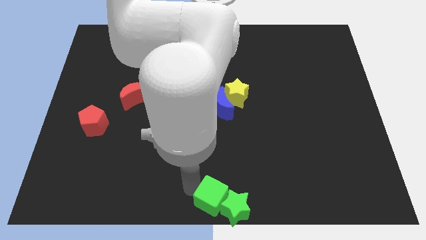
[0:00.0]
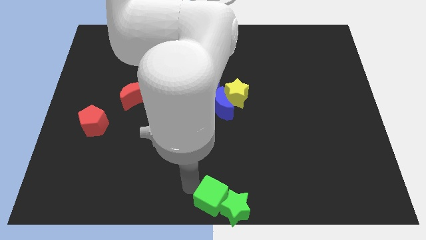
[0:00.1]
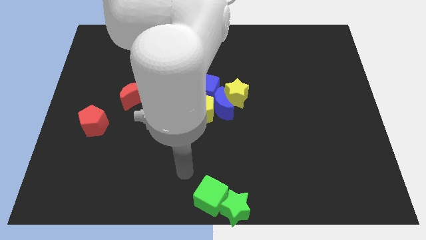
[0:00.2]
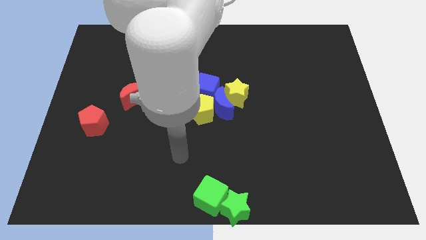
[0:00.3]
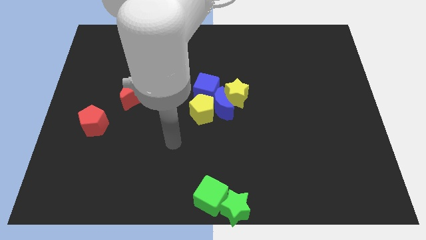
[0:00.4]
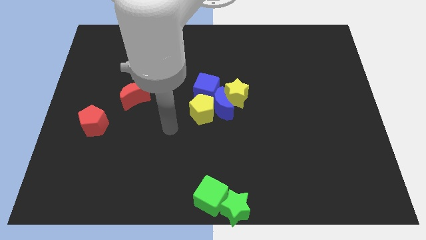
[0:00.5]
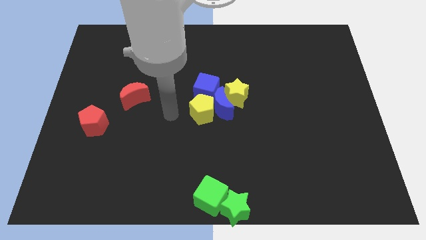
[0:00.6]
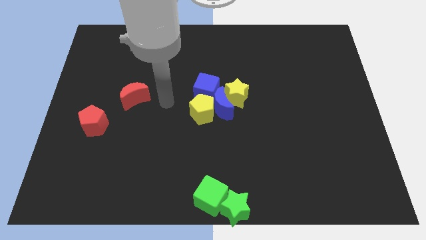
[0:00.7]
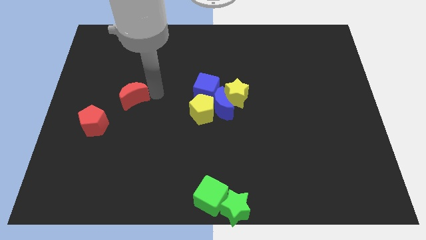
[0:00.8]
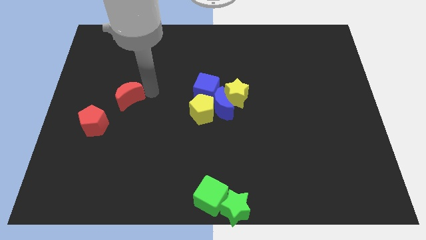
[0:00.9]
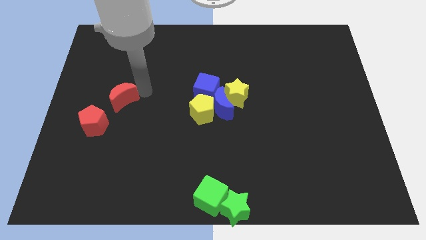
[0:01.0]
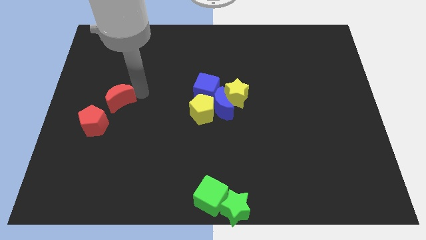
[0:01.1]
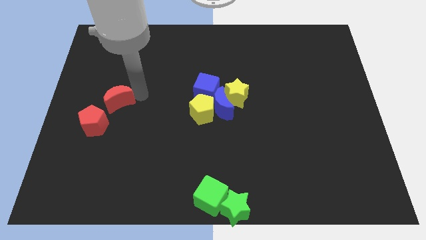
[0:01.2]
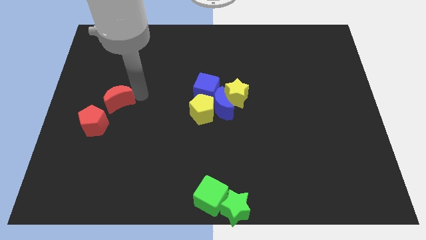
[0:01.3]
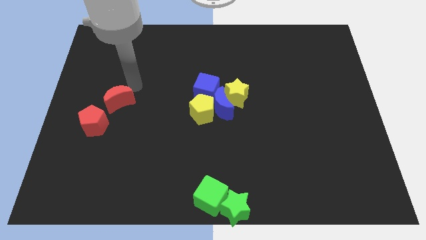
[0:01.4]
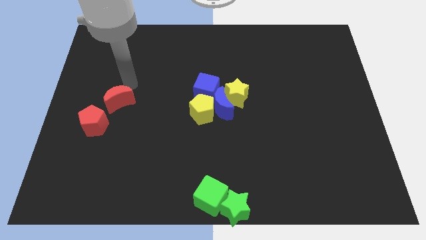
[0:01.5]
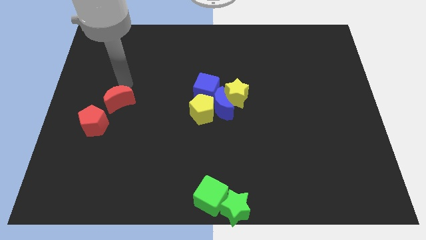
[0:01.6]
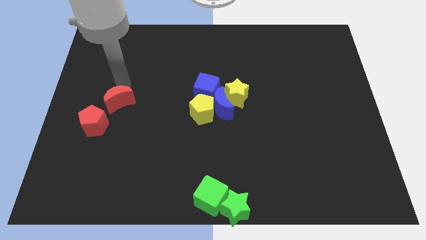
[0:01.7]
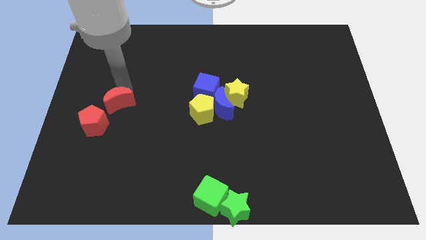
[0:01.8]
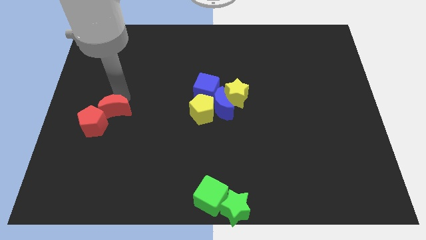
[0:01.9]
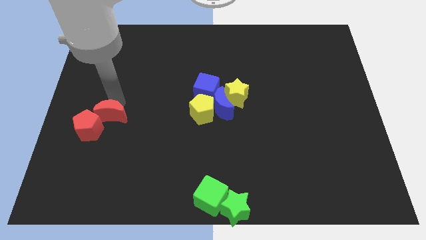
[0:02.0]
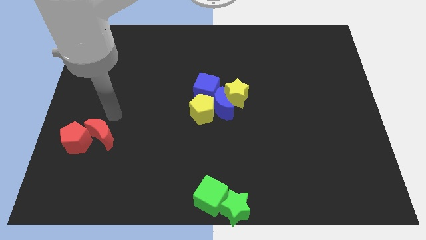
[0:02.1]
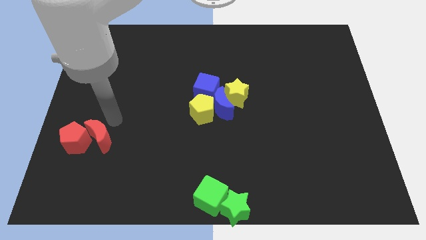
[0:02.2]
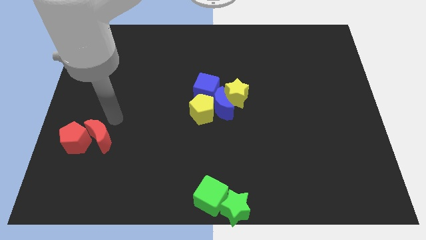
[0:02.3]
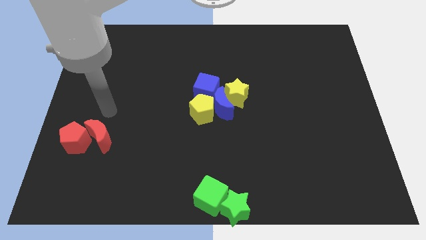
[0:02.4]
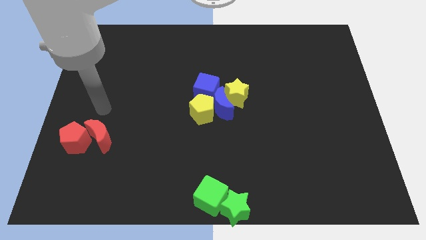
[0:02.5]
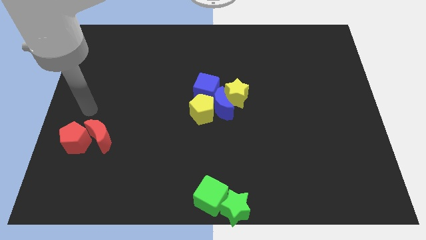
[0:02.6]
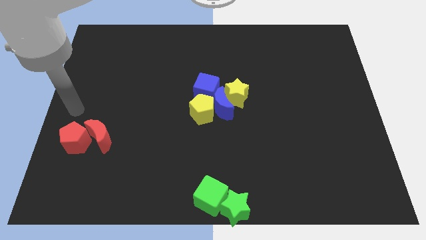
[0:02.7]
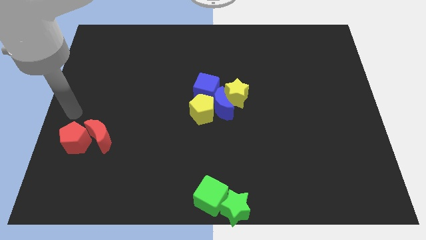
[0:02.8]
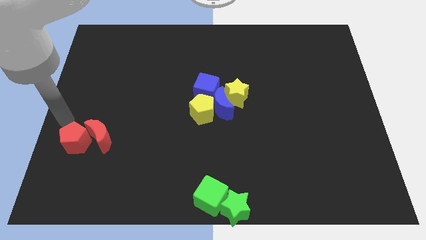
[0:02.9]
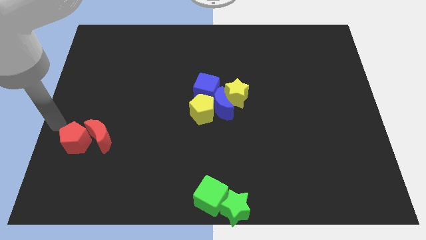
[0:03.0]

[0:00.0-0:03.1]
slide the red moon into the red pentagon

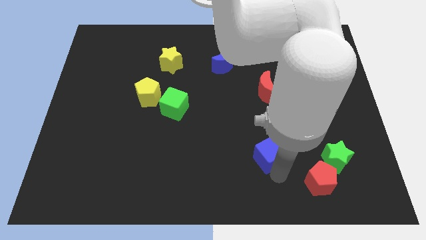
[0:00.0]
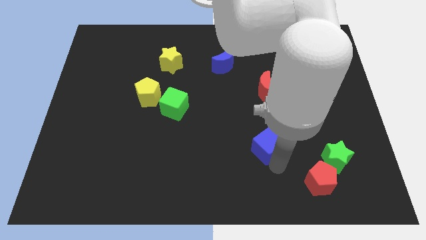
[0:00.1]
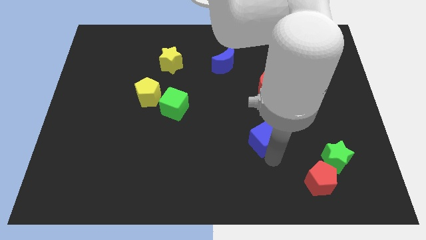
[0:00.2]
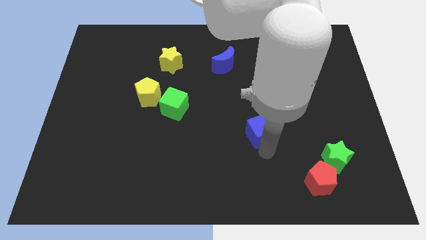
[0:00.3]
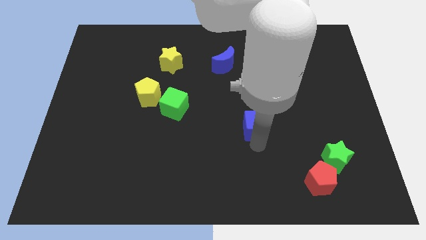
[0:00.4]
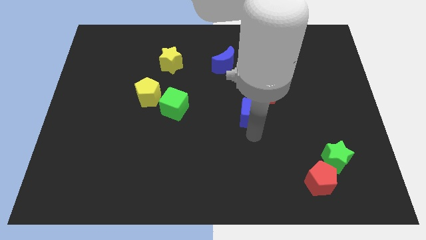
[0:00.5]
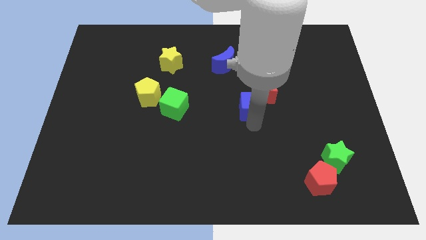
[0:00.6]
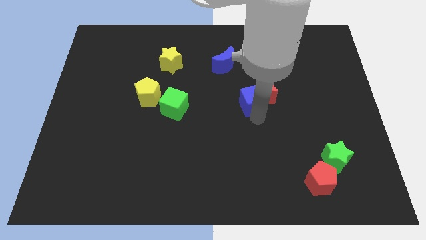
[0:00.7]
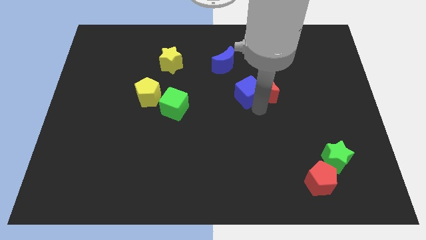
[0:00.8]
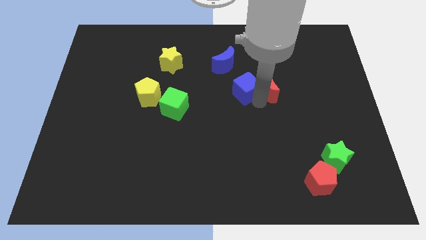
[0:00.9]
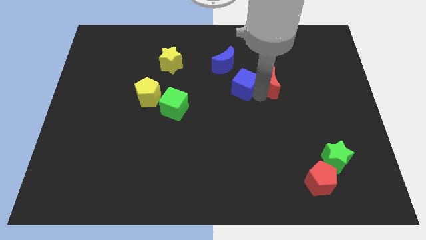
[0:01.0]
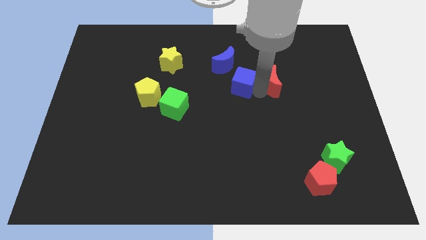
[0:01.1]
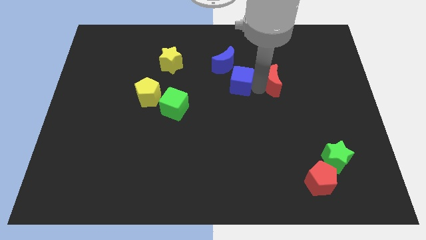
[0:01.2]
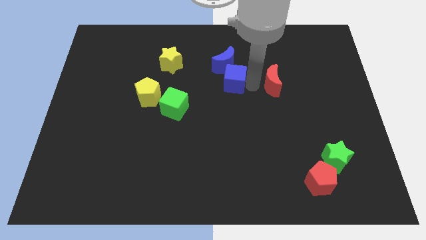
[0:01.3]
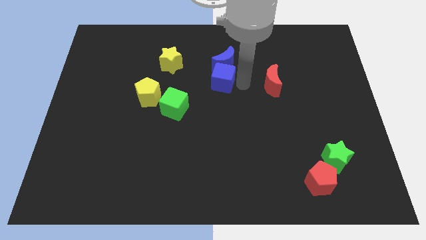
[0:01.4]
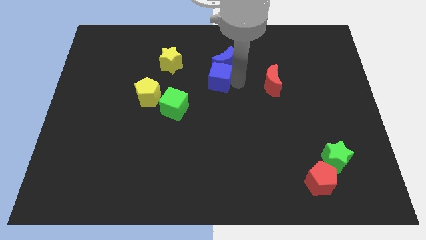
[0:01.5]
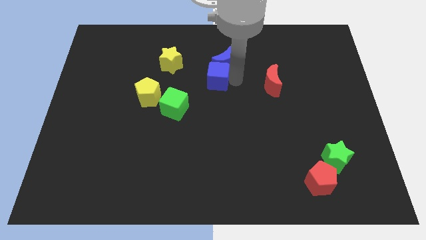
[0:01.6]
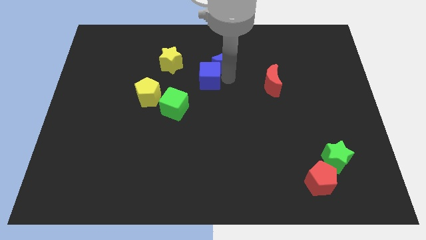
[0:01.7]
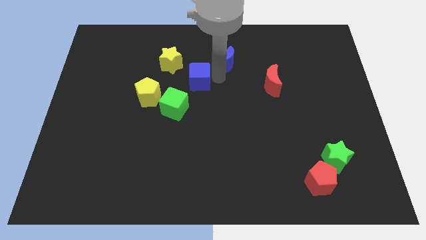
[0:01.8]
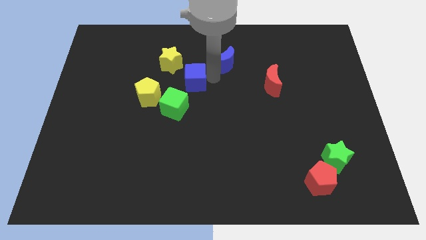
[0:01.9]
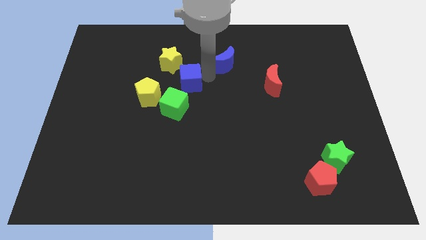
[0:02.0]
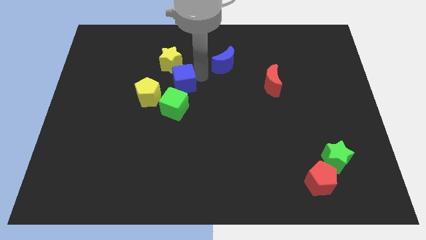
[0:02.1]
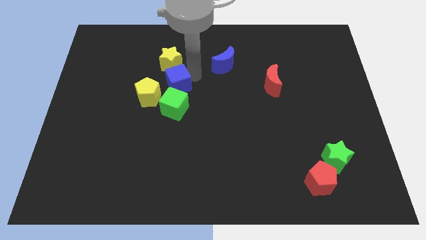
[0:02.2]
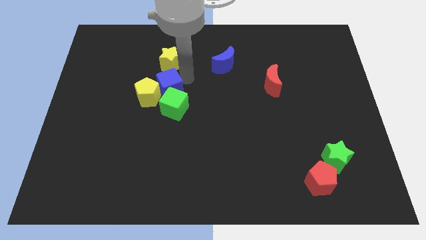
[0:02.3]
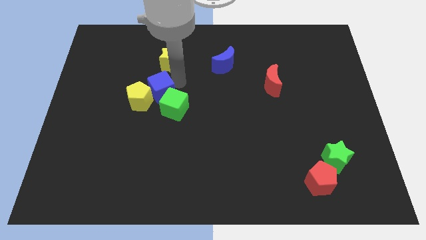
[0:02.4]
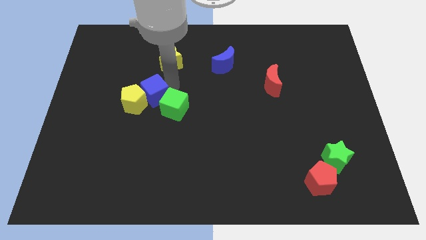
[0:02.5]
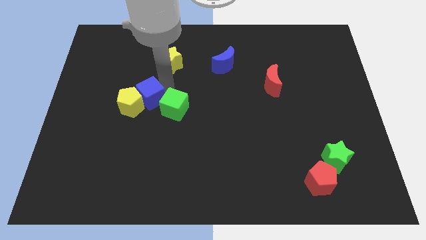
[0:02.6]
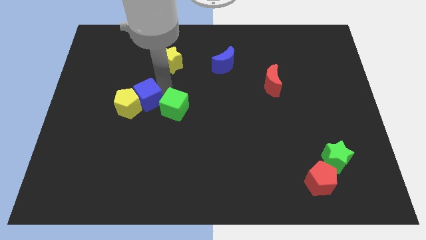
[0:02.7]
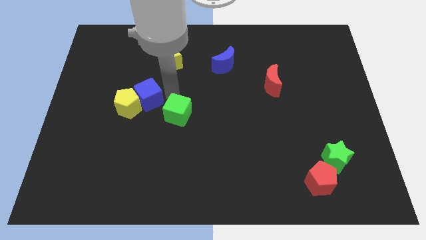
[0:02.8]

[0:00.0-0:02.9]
move blue cube into yellow pentagon

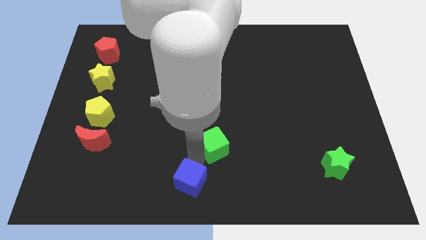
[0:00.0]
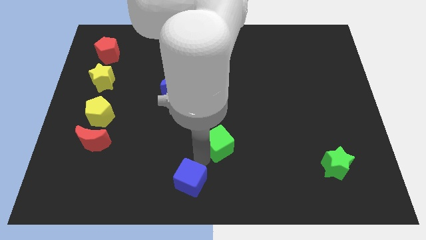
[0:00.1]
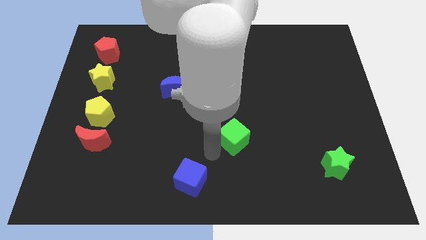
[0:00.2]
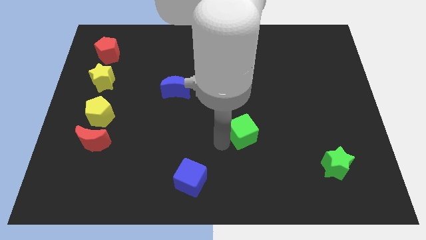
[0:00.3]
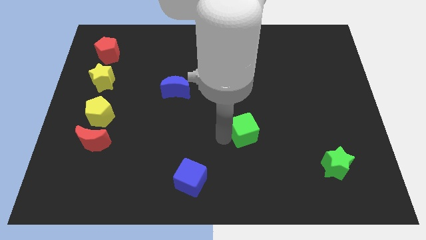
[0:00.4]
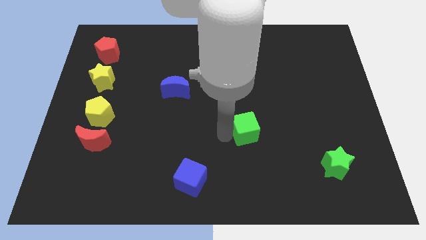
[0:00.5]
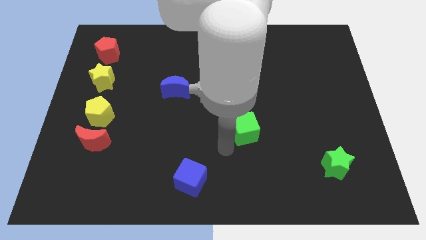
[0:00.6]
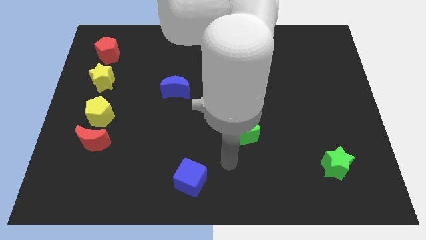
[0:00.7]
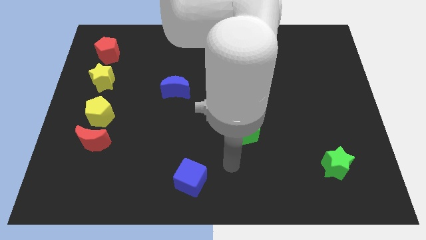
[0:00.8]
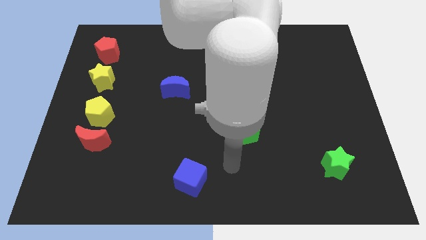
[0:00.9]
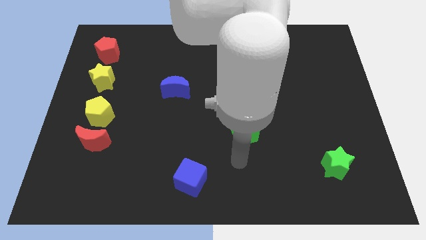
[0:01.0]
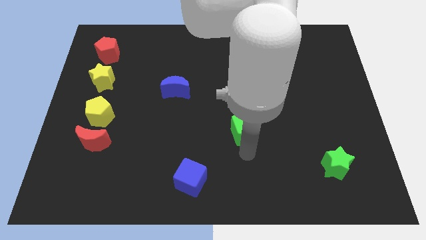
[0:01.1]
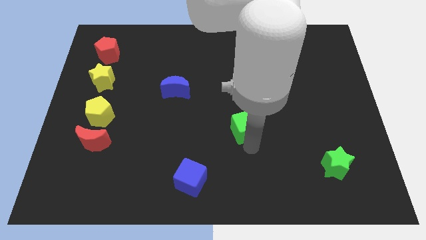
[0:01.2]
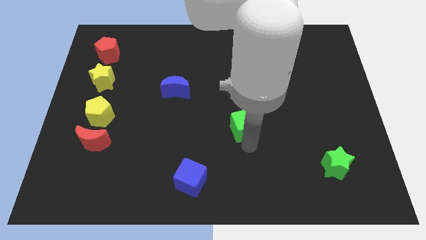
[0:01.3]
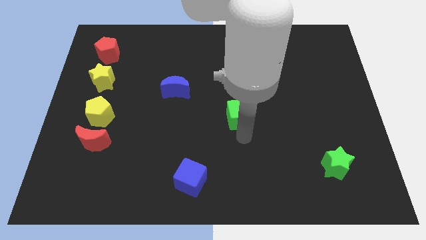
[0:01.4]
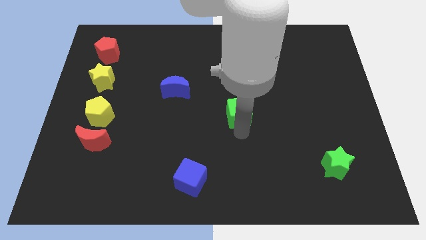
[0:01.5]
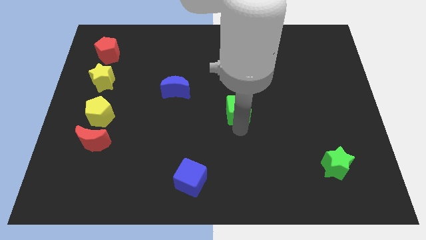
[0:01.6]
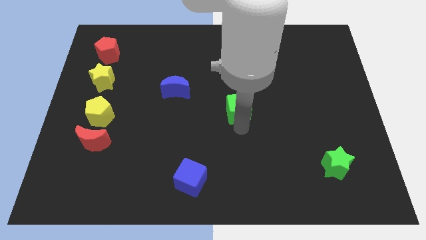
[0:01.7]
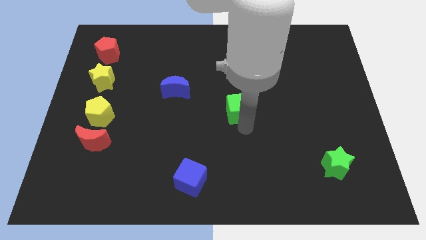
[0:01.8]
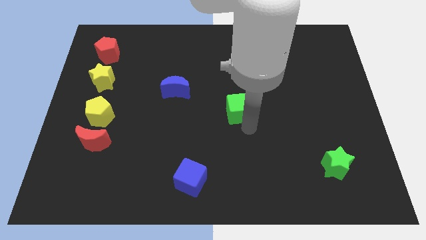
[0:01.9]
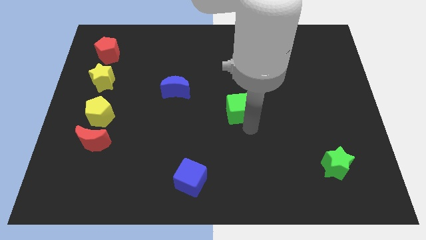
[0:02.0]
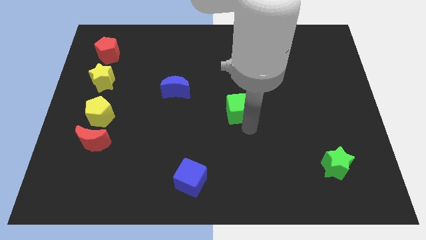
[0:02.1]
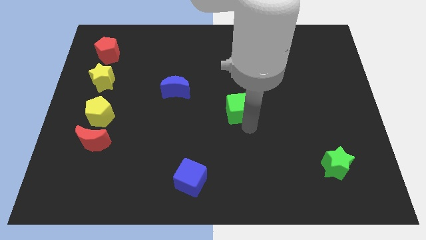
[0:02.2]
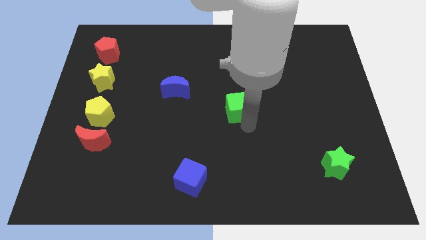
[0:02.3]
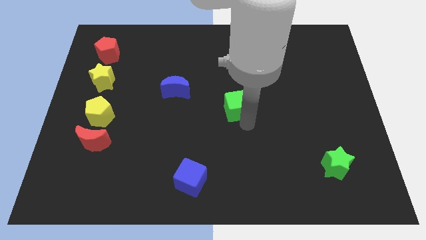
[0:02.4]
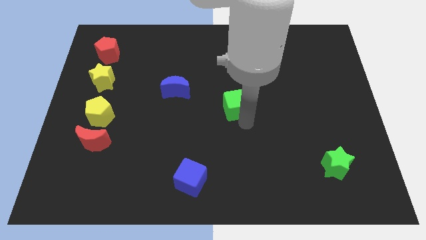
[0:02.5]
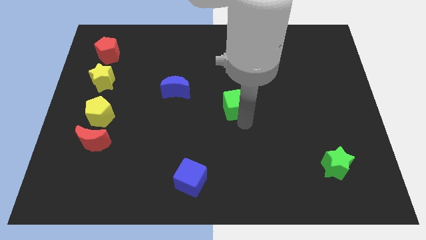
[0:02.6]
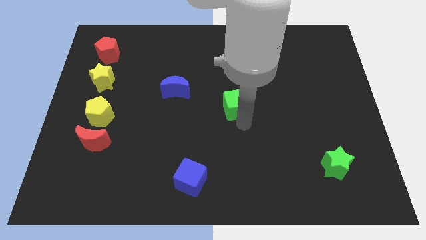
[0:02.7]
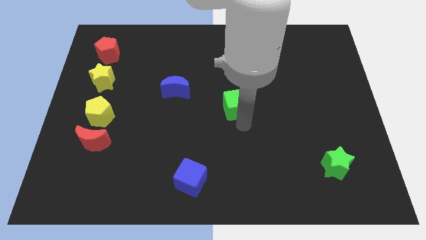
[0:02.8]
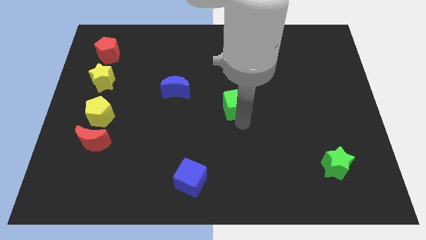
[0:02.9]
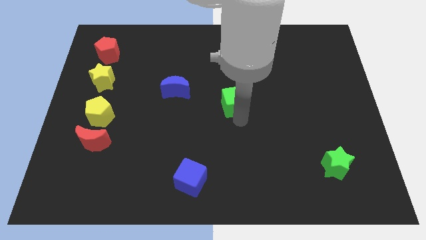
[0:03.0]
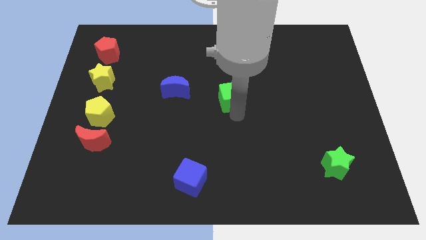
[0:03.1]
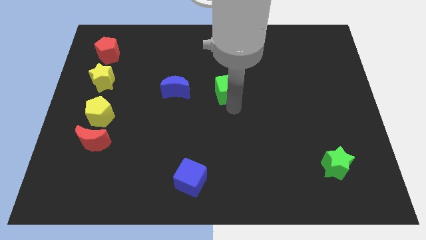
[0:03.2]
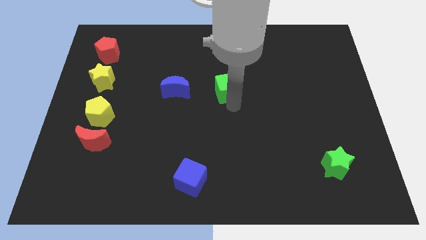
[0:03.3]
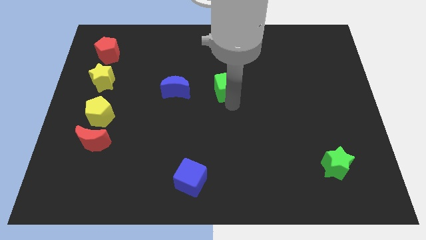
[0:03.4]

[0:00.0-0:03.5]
move green cube right to the blue crescent
